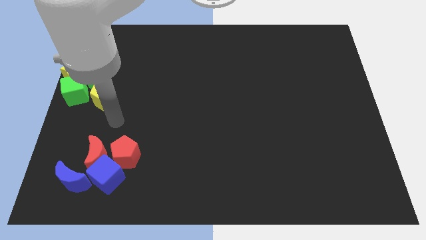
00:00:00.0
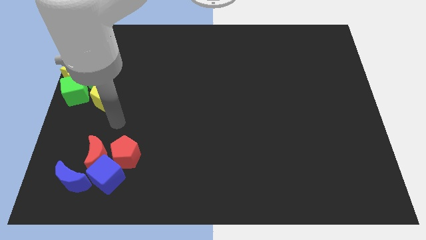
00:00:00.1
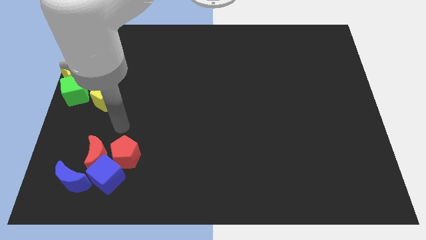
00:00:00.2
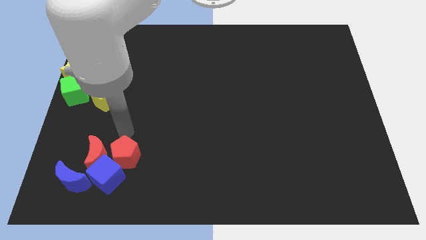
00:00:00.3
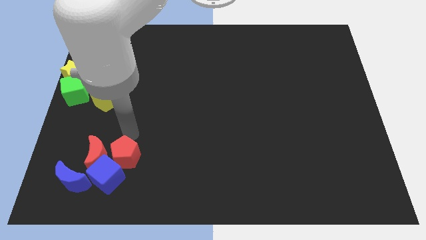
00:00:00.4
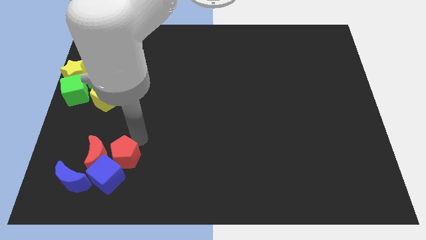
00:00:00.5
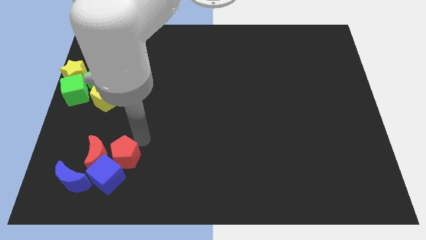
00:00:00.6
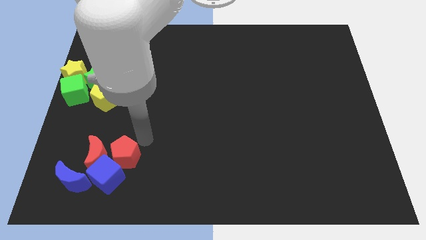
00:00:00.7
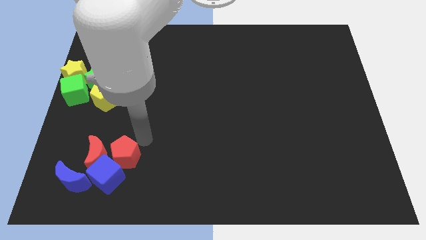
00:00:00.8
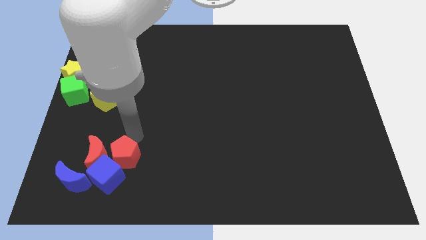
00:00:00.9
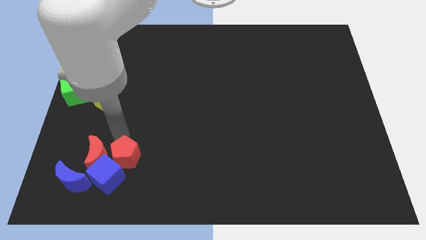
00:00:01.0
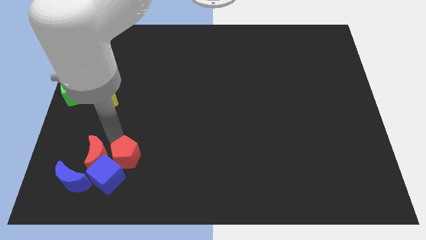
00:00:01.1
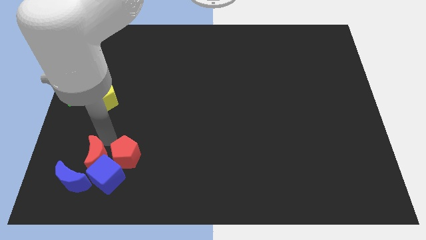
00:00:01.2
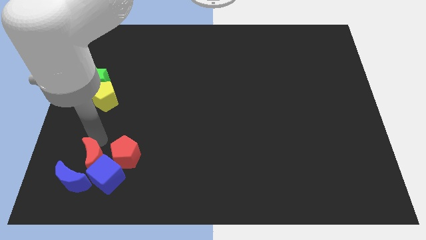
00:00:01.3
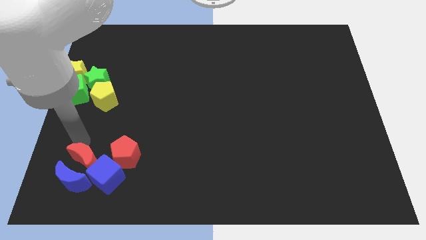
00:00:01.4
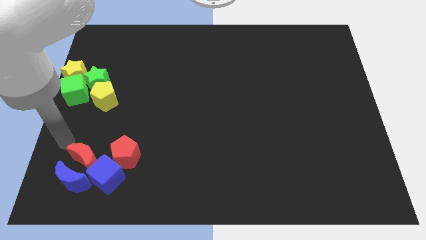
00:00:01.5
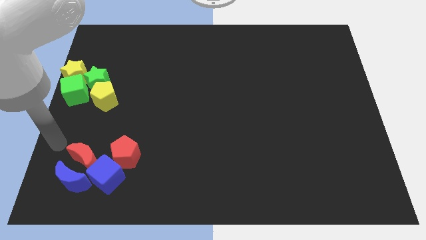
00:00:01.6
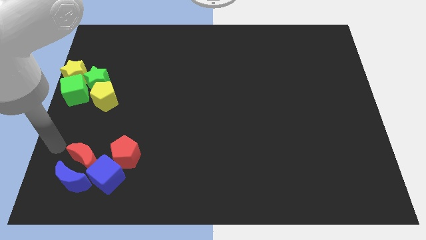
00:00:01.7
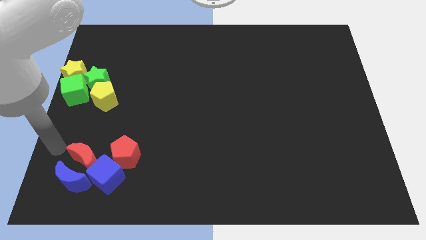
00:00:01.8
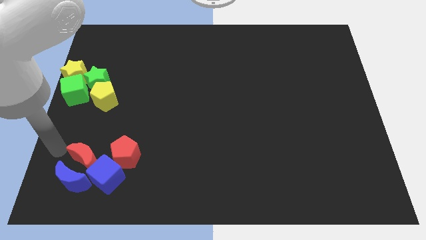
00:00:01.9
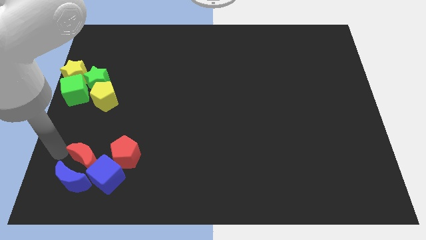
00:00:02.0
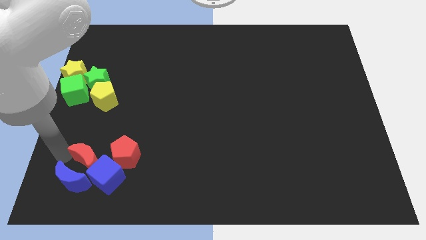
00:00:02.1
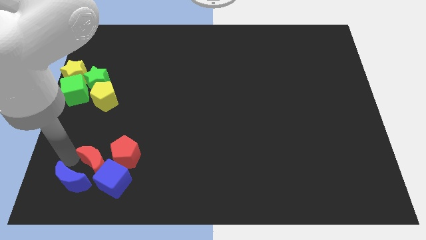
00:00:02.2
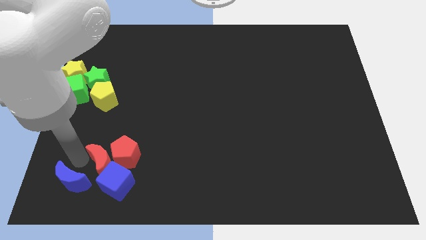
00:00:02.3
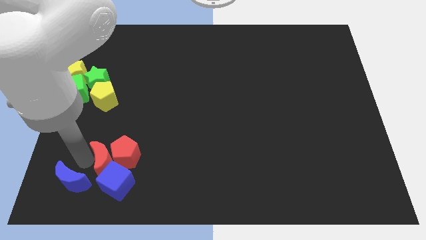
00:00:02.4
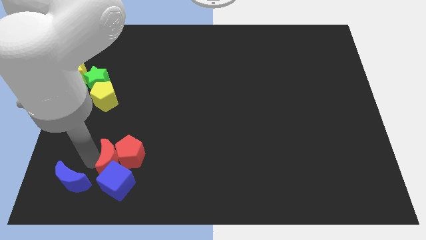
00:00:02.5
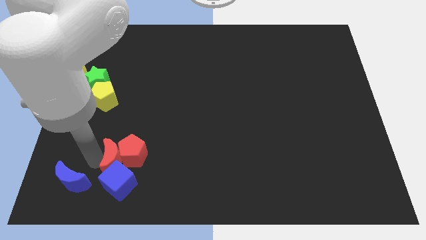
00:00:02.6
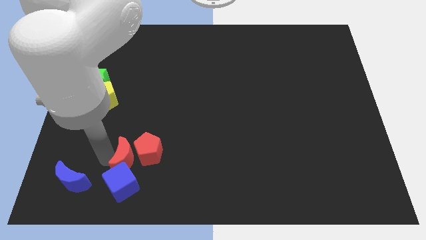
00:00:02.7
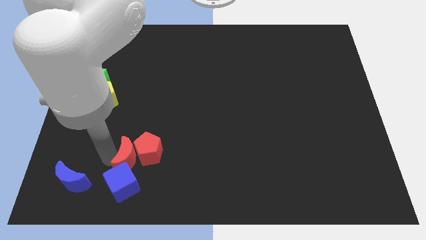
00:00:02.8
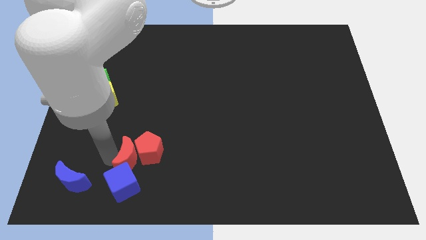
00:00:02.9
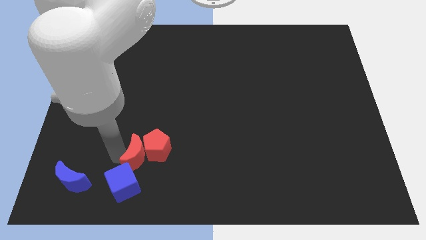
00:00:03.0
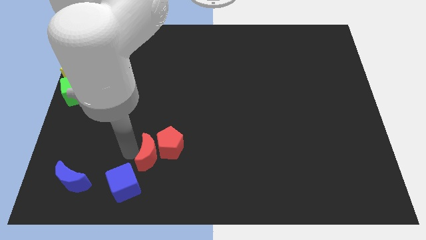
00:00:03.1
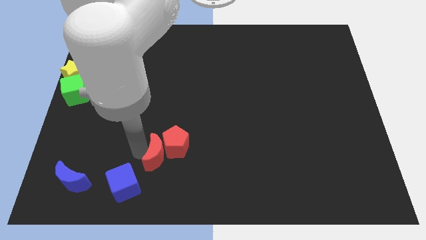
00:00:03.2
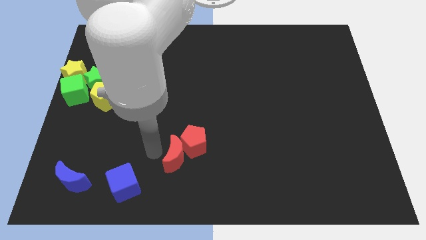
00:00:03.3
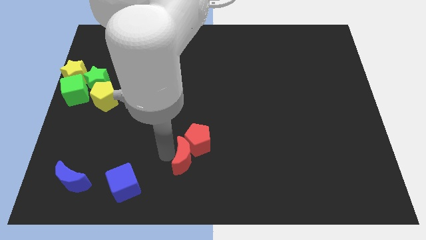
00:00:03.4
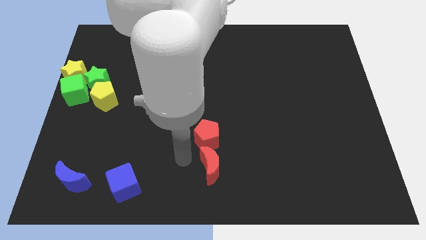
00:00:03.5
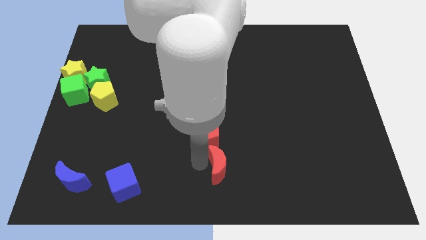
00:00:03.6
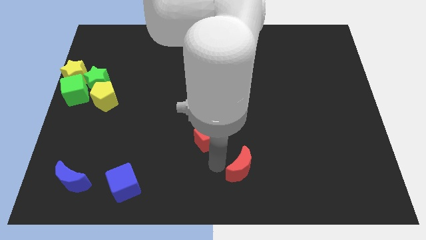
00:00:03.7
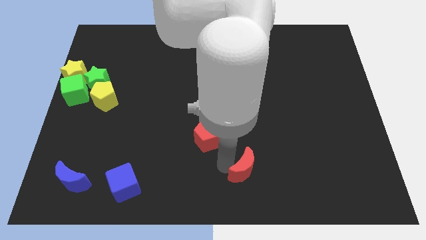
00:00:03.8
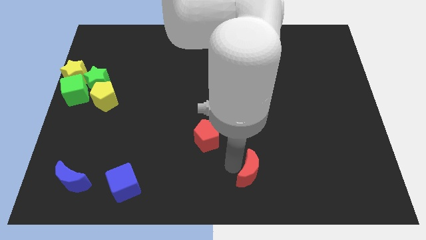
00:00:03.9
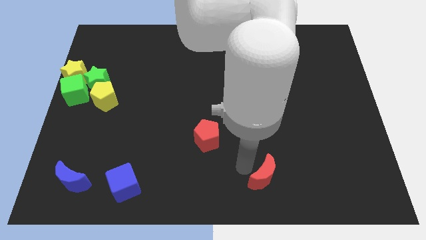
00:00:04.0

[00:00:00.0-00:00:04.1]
separate the red blocks from blue blocks

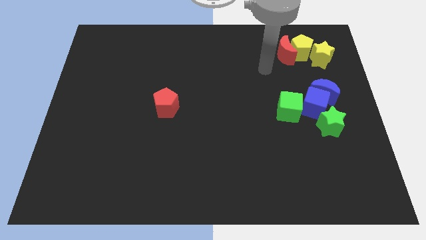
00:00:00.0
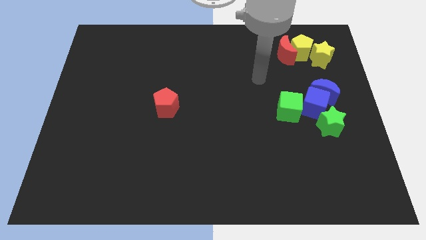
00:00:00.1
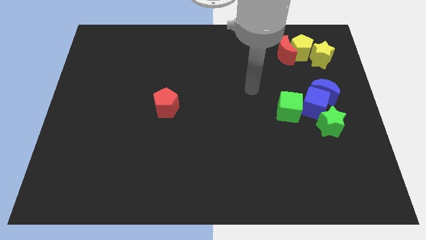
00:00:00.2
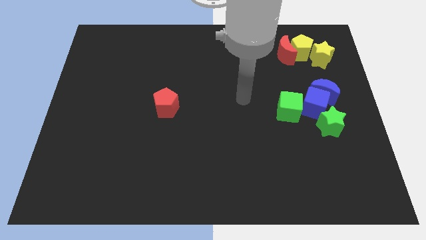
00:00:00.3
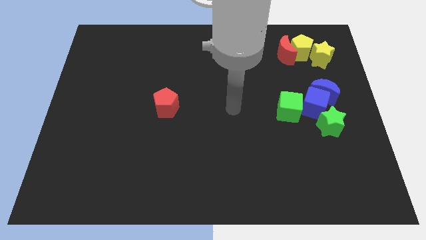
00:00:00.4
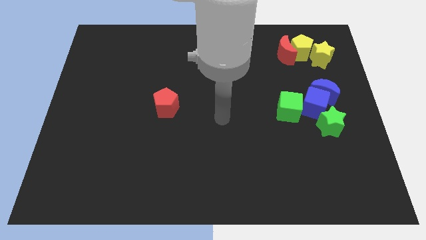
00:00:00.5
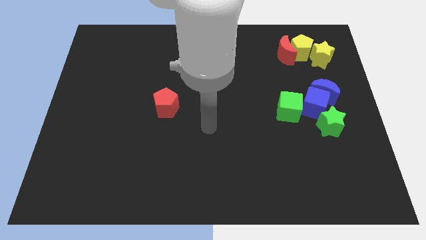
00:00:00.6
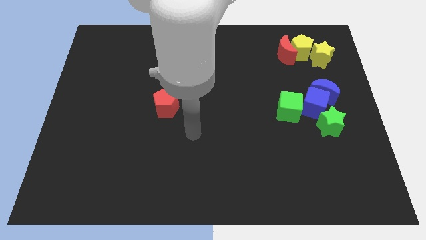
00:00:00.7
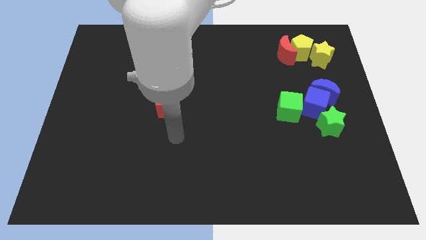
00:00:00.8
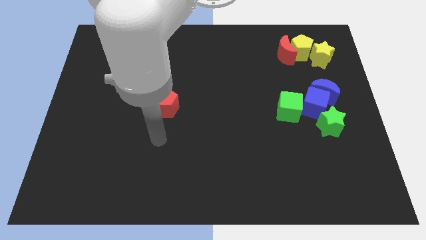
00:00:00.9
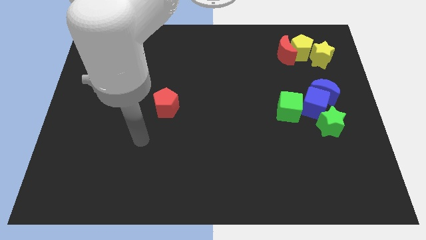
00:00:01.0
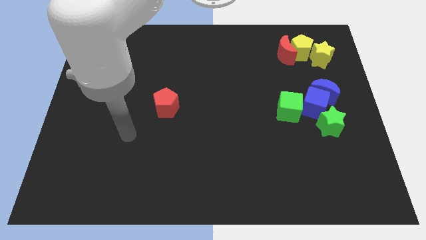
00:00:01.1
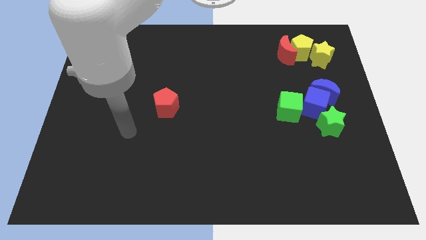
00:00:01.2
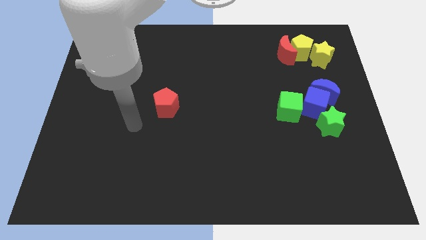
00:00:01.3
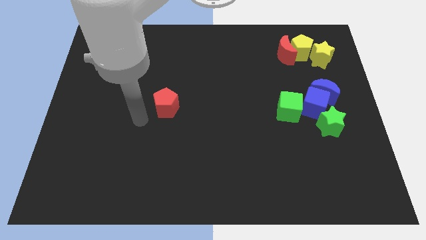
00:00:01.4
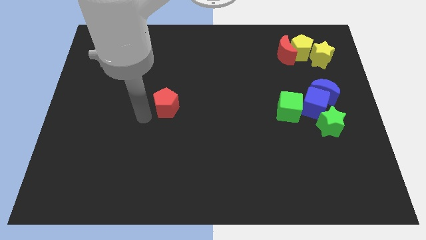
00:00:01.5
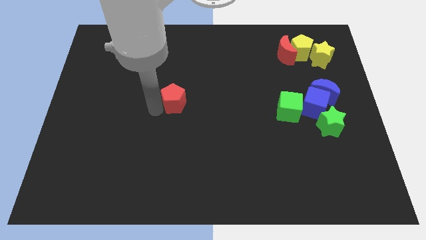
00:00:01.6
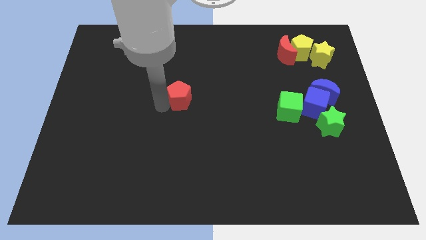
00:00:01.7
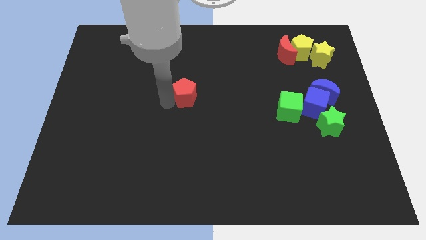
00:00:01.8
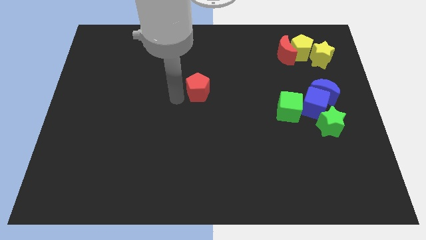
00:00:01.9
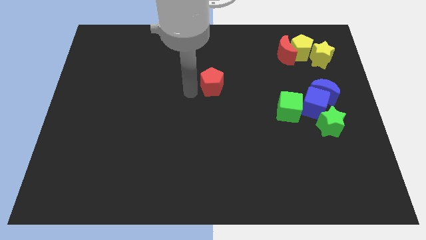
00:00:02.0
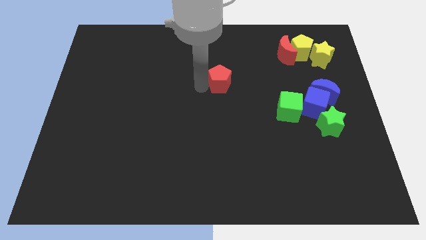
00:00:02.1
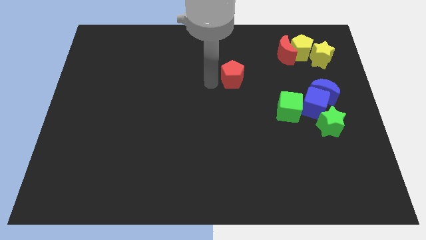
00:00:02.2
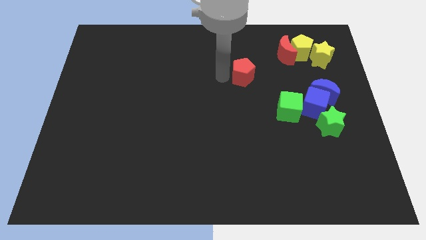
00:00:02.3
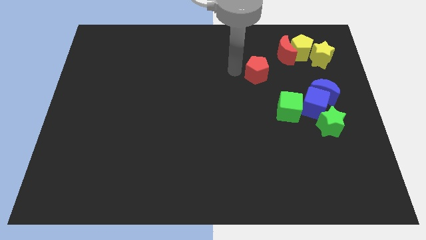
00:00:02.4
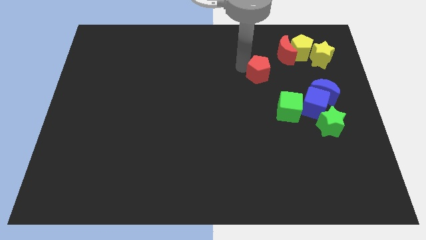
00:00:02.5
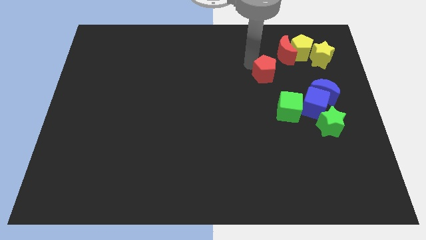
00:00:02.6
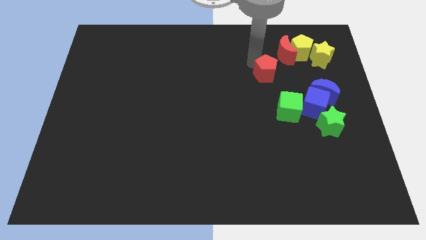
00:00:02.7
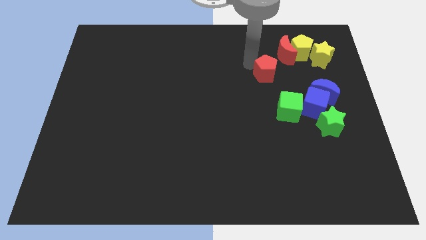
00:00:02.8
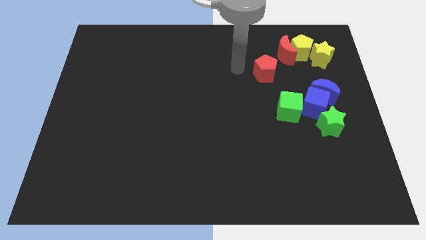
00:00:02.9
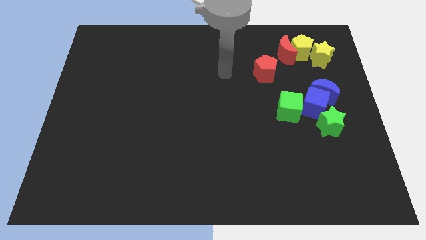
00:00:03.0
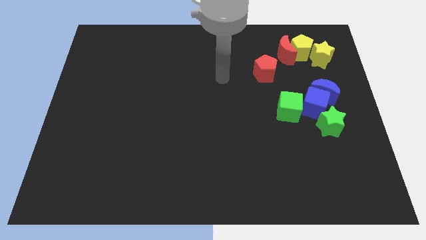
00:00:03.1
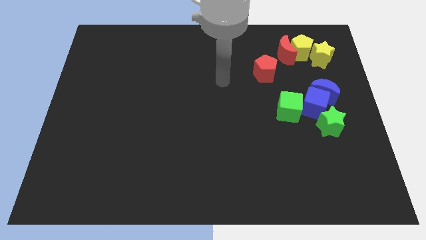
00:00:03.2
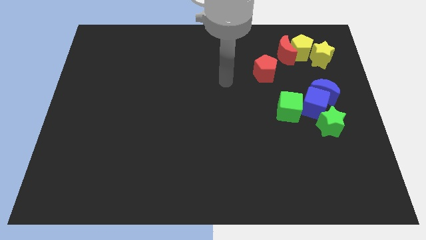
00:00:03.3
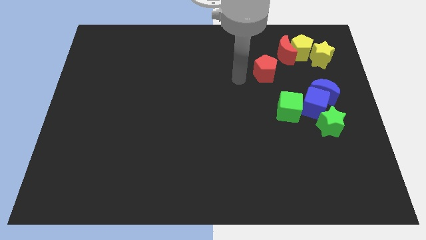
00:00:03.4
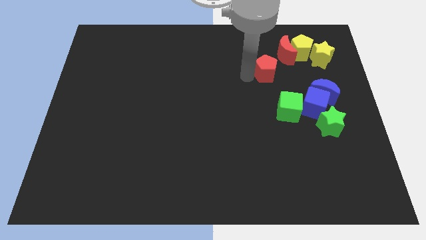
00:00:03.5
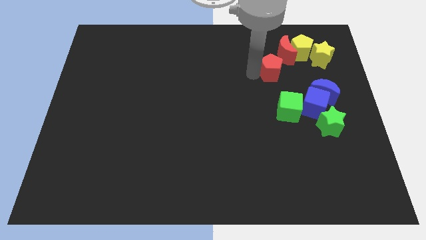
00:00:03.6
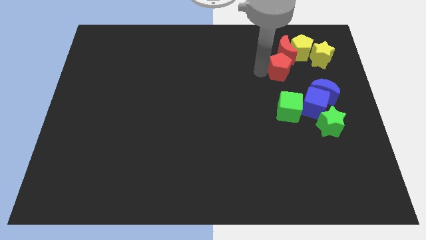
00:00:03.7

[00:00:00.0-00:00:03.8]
push the red pentagon to the bottom left of the red crescent

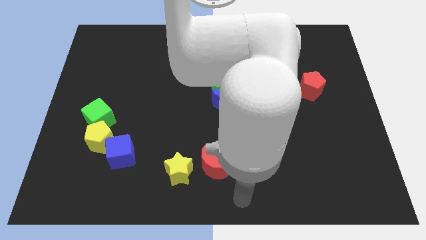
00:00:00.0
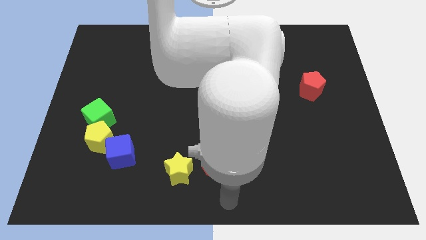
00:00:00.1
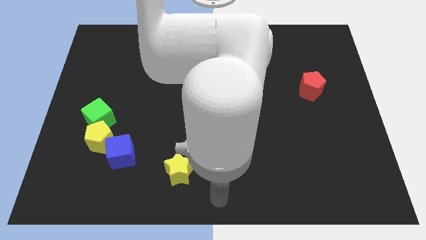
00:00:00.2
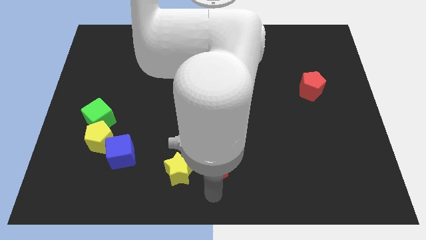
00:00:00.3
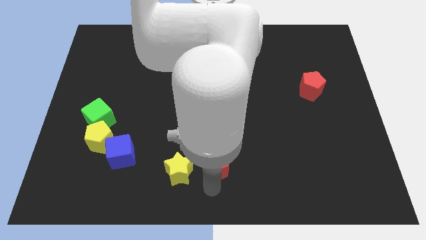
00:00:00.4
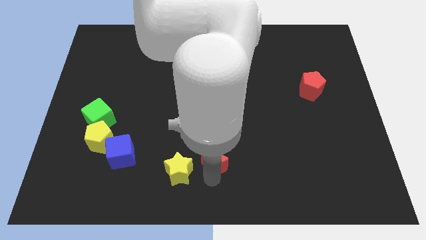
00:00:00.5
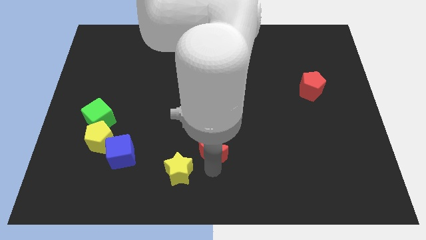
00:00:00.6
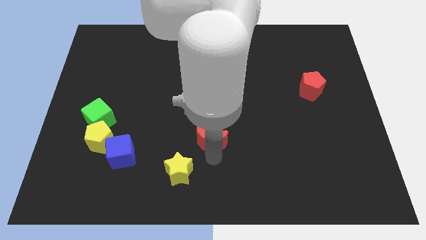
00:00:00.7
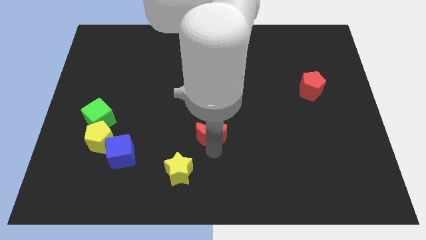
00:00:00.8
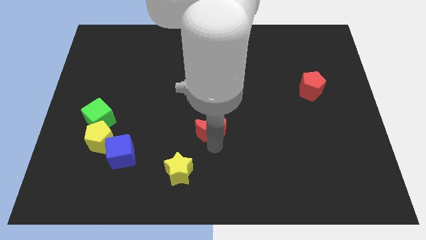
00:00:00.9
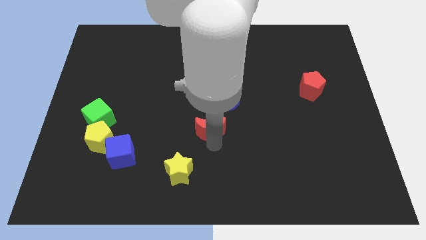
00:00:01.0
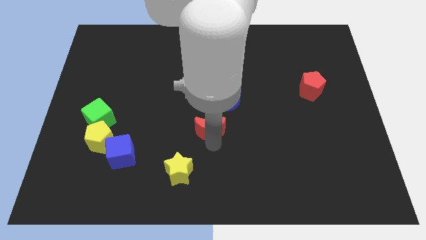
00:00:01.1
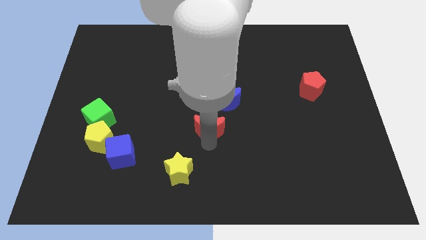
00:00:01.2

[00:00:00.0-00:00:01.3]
push the red moon close to the blue moon
